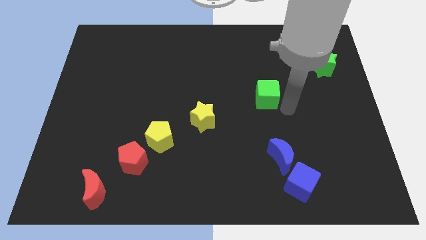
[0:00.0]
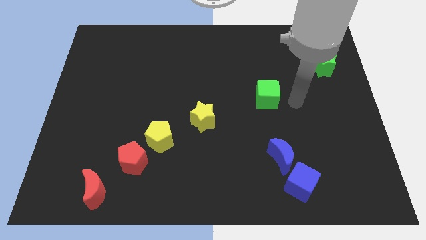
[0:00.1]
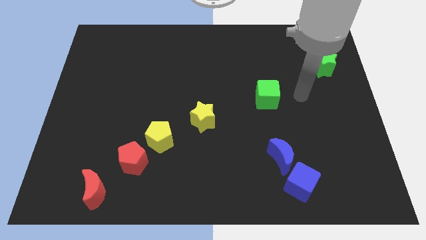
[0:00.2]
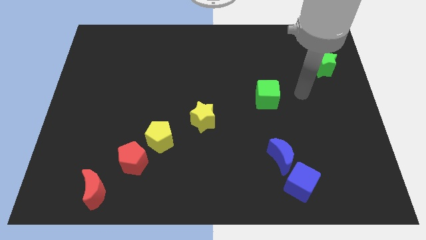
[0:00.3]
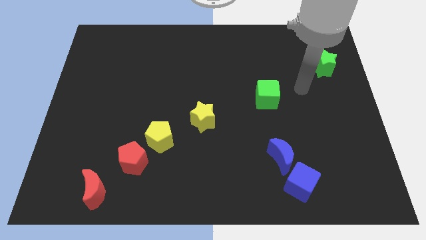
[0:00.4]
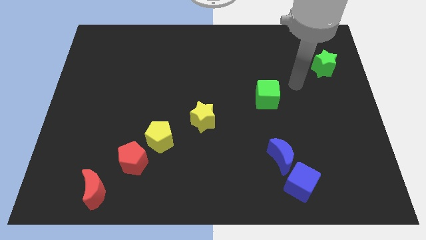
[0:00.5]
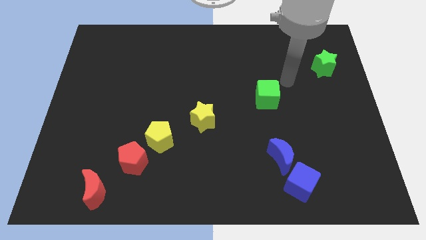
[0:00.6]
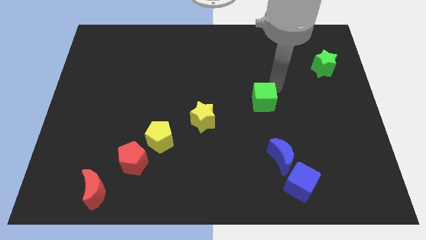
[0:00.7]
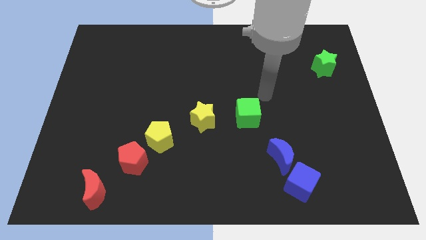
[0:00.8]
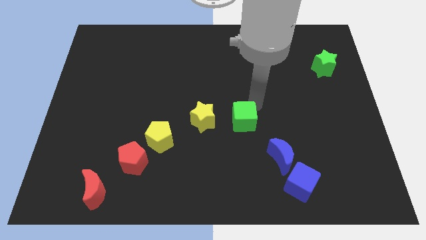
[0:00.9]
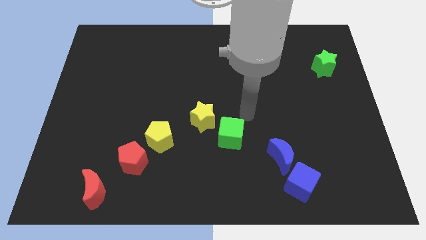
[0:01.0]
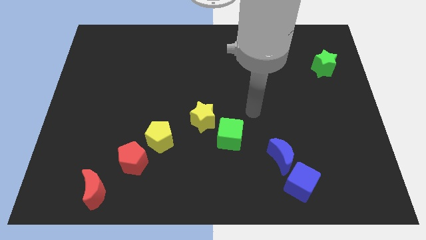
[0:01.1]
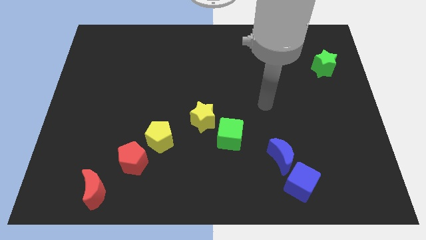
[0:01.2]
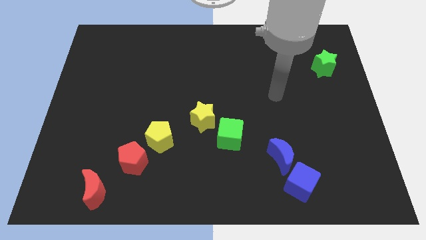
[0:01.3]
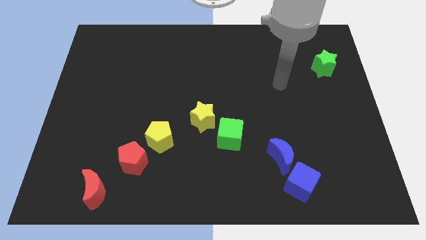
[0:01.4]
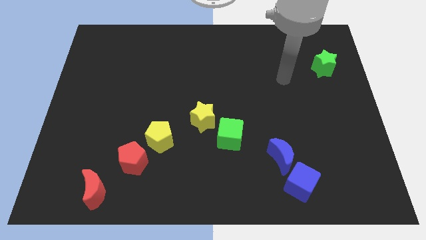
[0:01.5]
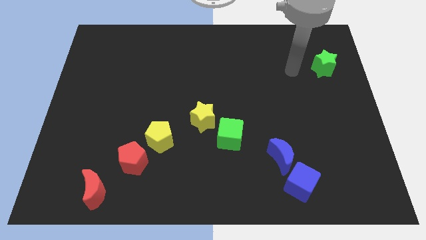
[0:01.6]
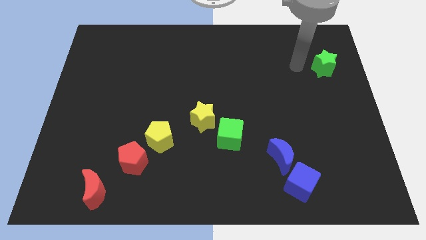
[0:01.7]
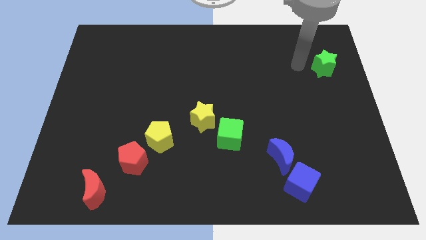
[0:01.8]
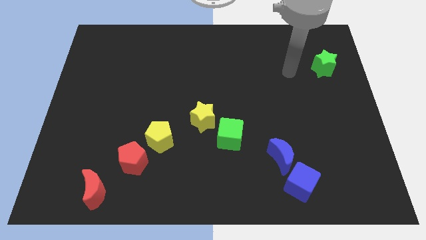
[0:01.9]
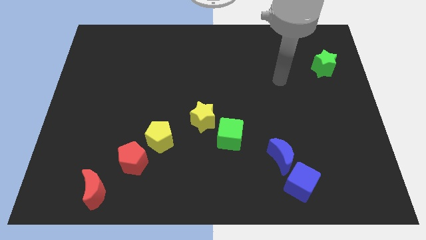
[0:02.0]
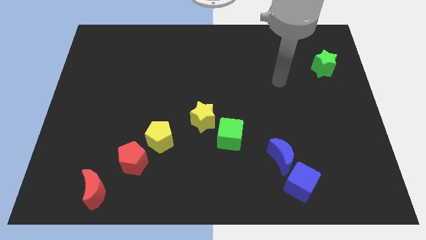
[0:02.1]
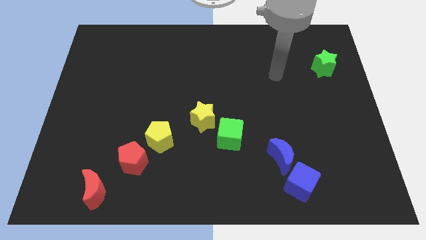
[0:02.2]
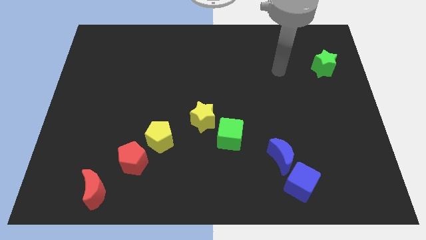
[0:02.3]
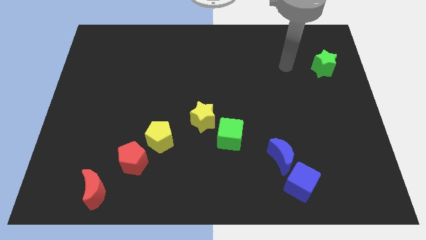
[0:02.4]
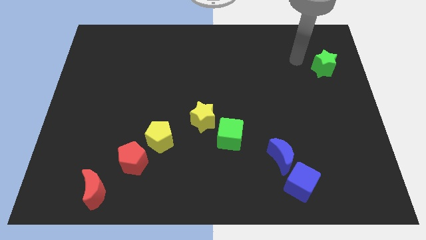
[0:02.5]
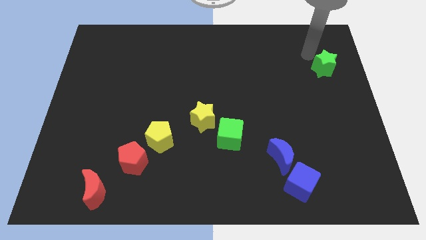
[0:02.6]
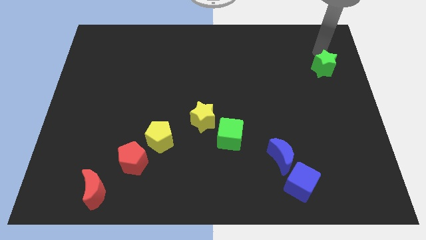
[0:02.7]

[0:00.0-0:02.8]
slide the green cube diagonally in between the yellow star and the blue cube

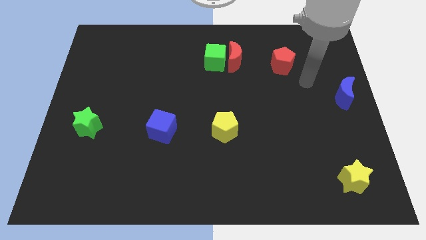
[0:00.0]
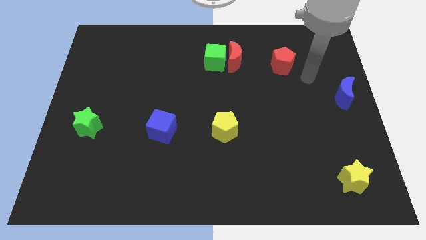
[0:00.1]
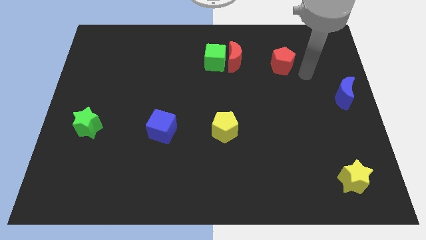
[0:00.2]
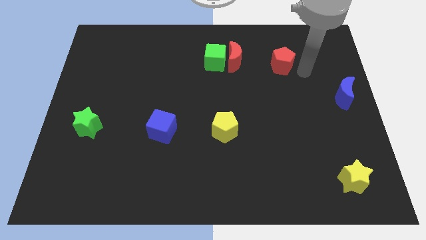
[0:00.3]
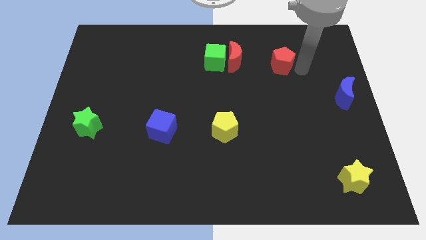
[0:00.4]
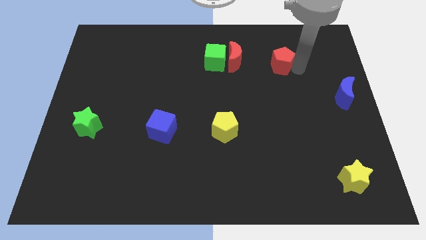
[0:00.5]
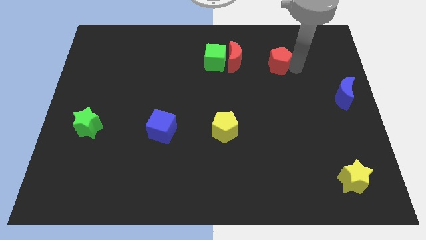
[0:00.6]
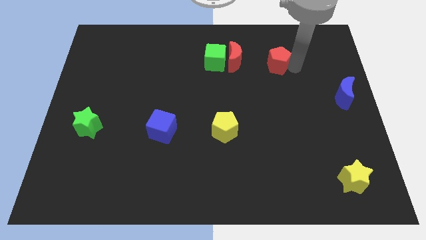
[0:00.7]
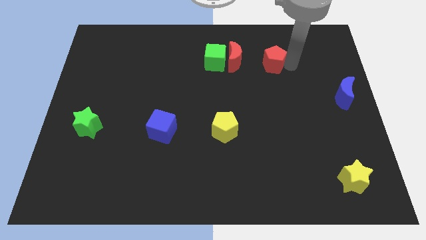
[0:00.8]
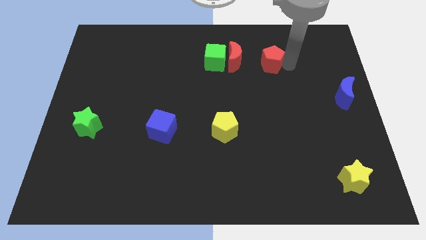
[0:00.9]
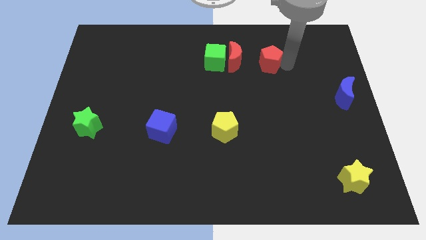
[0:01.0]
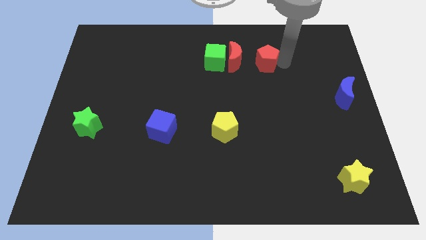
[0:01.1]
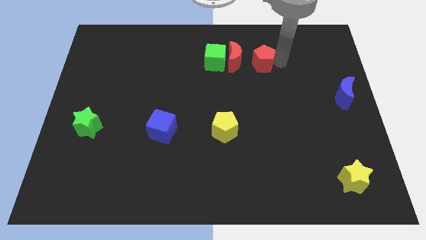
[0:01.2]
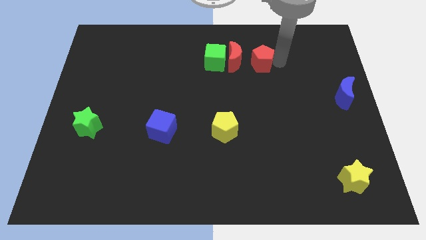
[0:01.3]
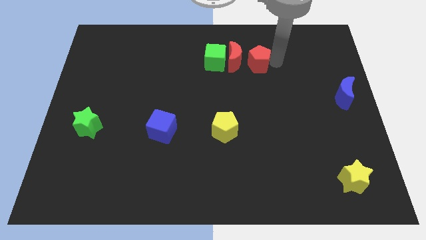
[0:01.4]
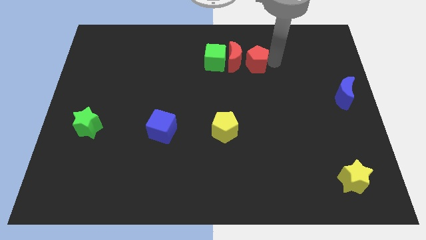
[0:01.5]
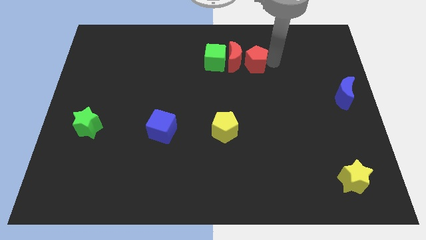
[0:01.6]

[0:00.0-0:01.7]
push the red pentagon close to the red crescent

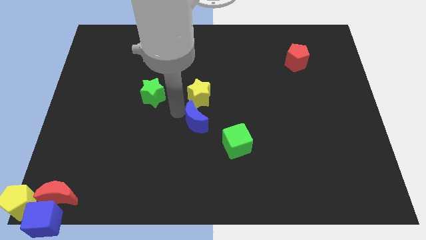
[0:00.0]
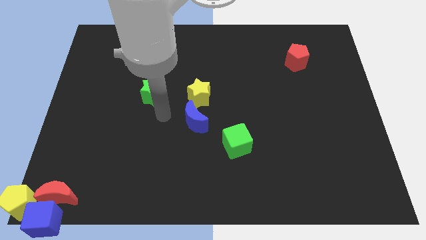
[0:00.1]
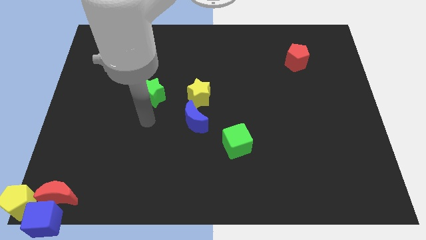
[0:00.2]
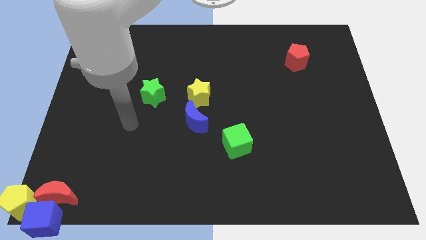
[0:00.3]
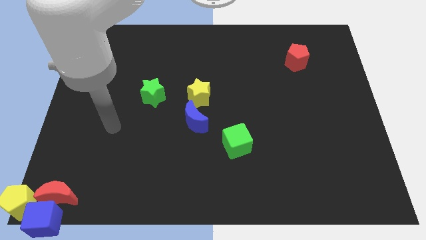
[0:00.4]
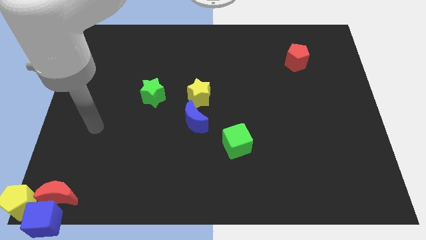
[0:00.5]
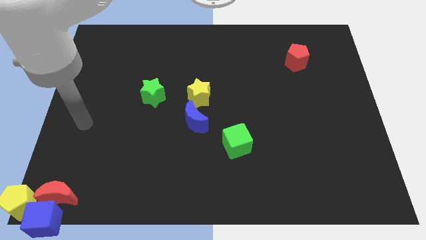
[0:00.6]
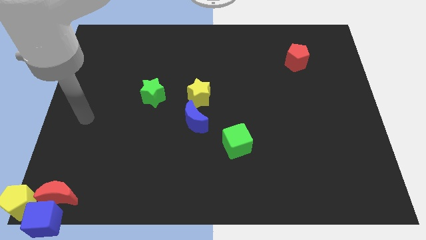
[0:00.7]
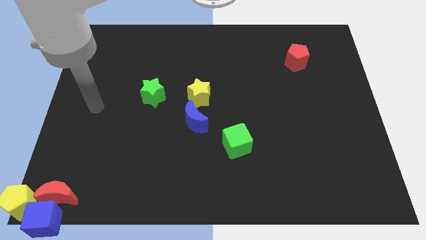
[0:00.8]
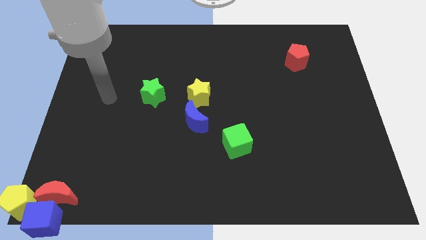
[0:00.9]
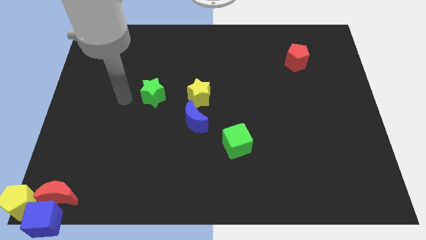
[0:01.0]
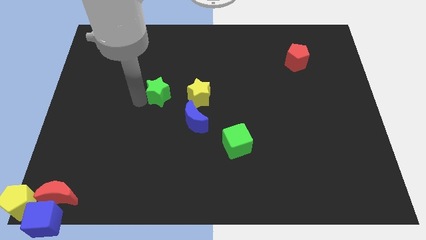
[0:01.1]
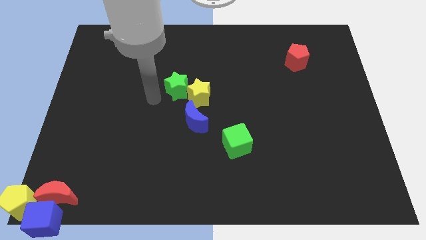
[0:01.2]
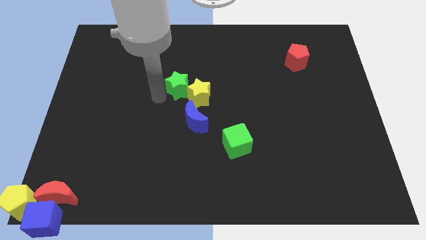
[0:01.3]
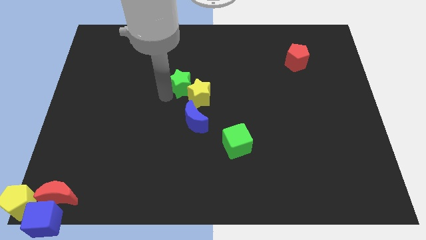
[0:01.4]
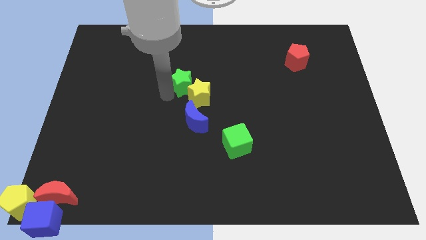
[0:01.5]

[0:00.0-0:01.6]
move the green star into yellow star

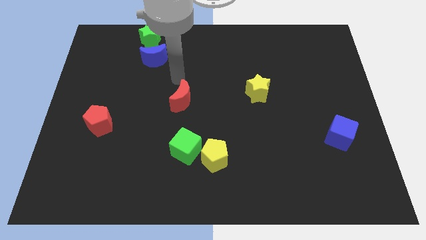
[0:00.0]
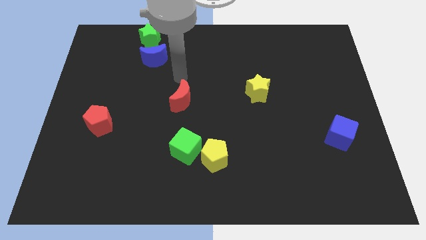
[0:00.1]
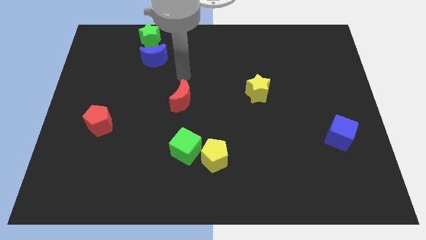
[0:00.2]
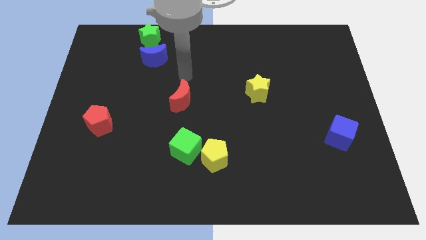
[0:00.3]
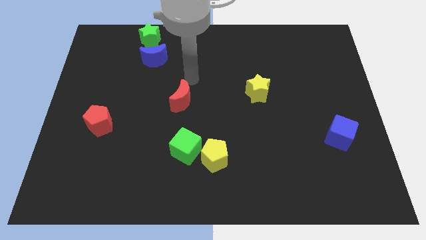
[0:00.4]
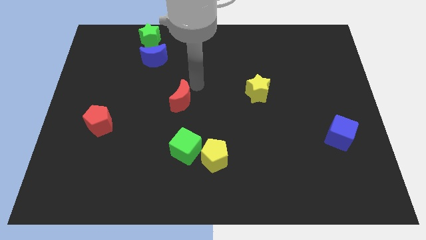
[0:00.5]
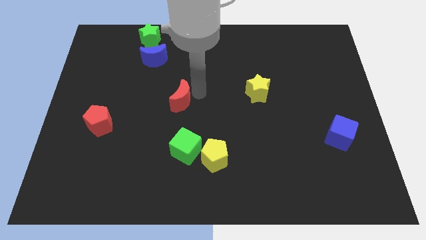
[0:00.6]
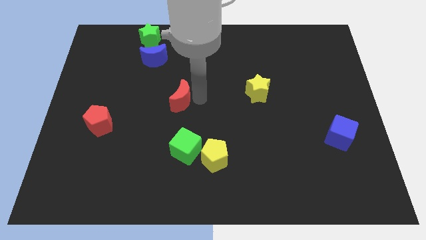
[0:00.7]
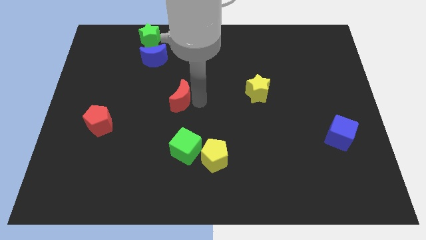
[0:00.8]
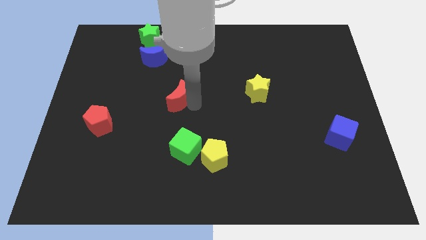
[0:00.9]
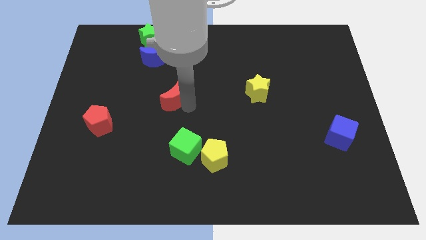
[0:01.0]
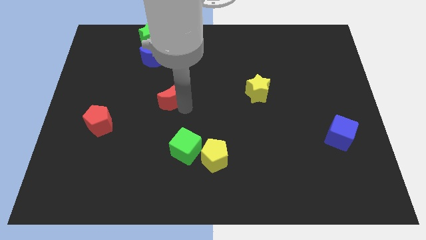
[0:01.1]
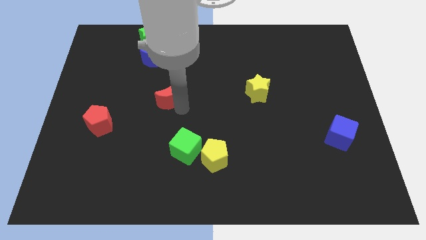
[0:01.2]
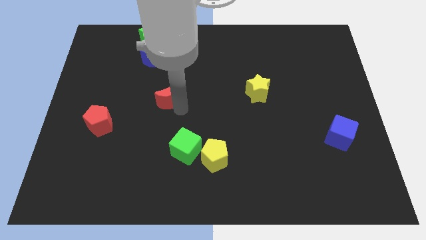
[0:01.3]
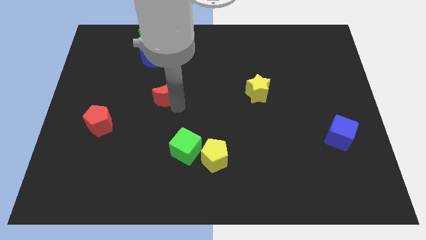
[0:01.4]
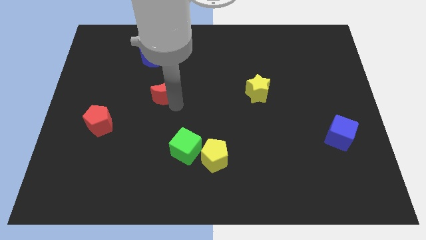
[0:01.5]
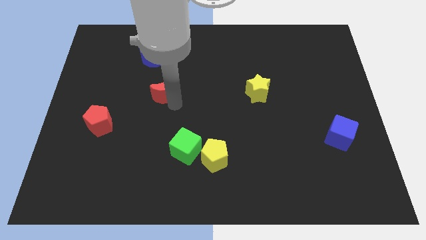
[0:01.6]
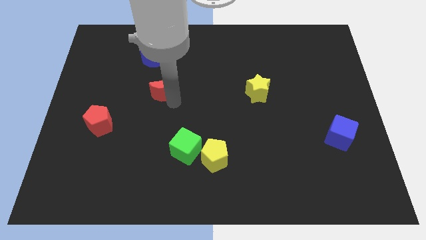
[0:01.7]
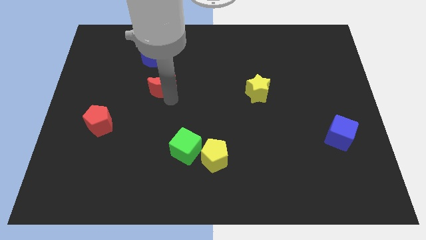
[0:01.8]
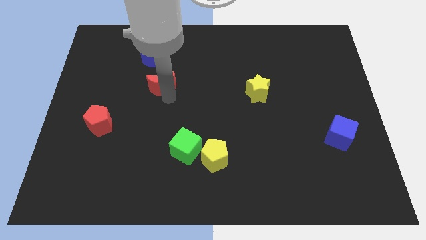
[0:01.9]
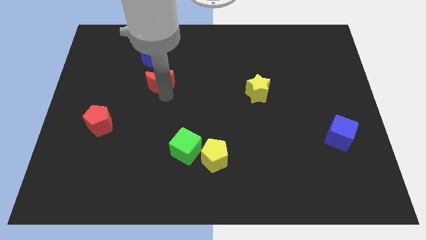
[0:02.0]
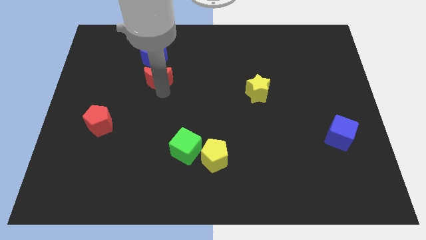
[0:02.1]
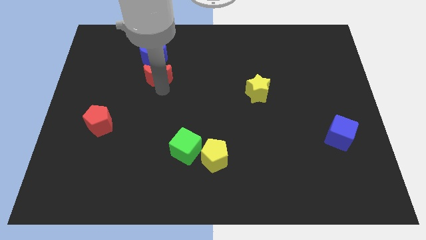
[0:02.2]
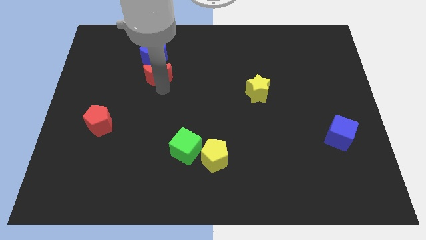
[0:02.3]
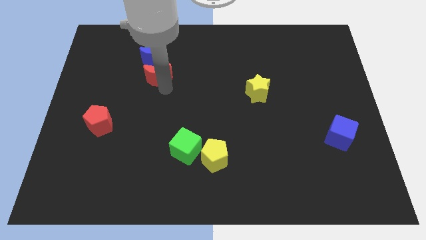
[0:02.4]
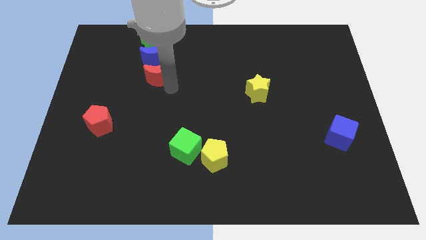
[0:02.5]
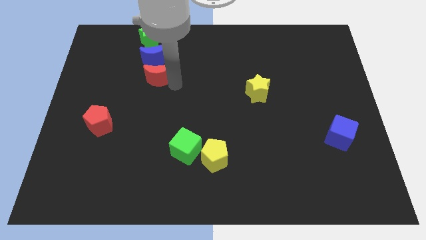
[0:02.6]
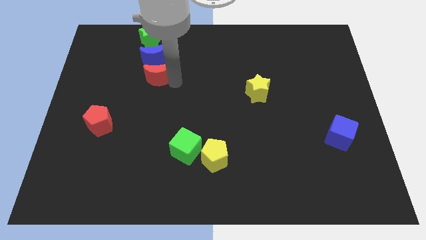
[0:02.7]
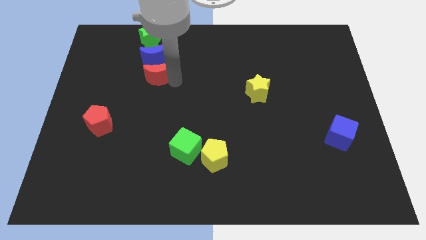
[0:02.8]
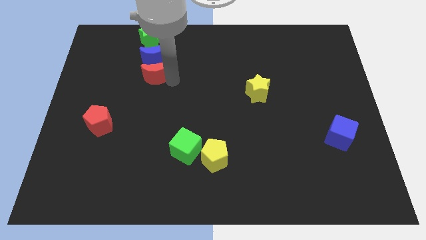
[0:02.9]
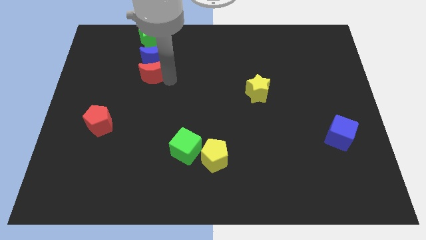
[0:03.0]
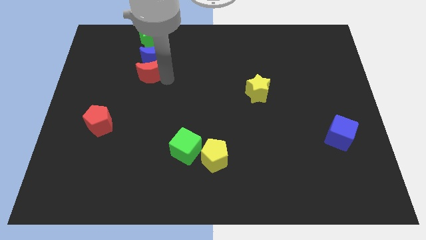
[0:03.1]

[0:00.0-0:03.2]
move the red moon below the blue moon
